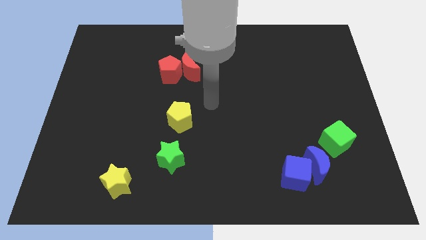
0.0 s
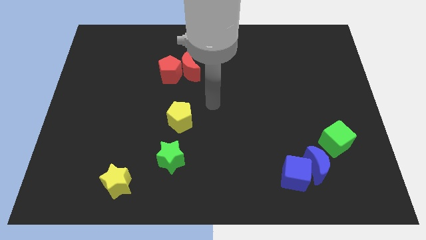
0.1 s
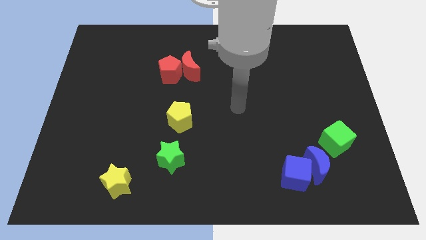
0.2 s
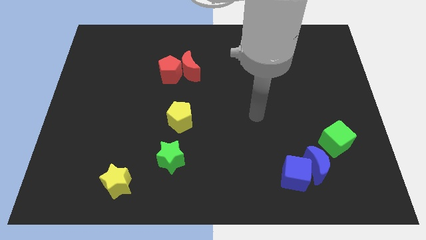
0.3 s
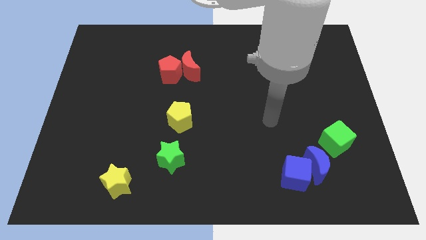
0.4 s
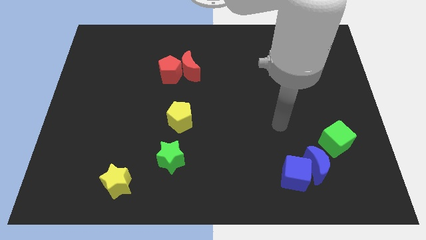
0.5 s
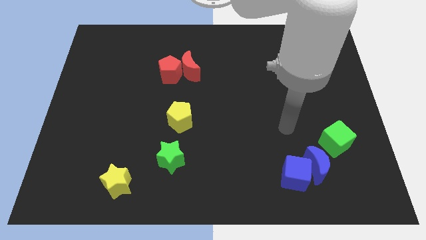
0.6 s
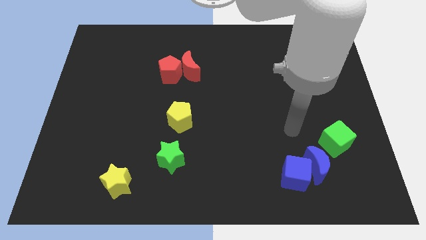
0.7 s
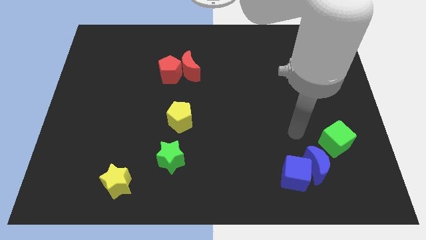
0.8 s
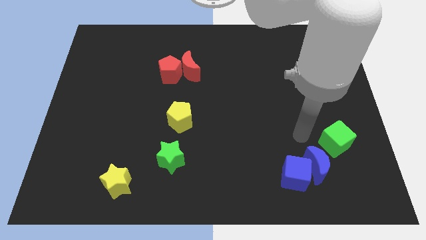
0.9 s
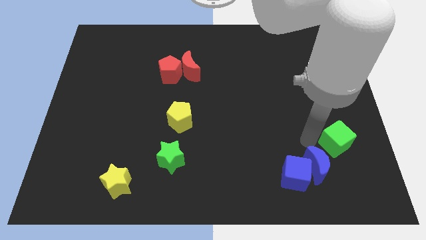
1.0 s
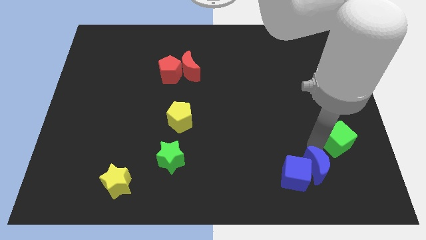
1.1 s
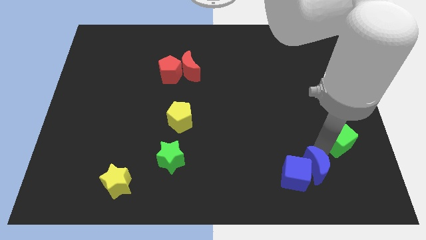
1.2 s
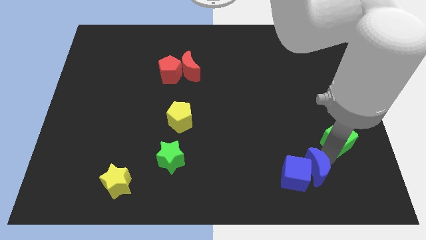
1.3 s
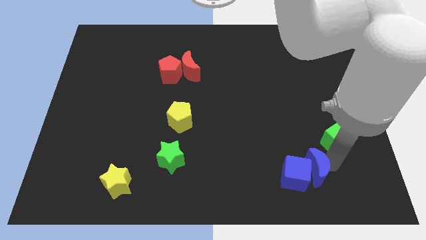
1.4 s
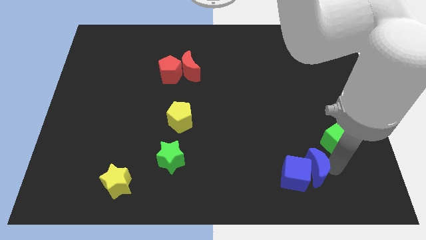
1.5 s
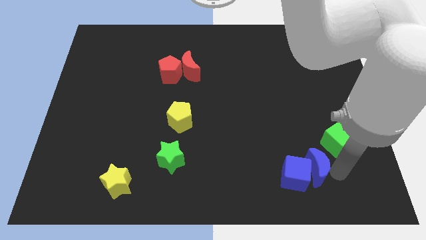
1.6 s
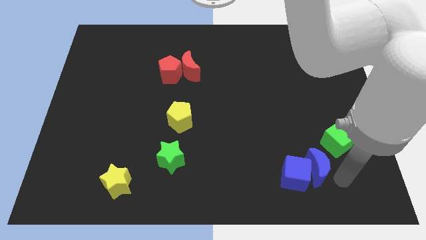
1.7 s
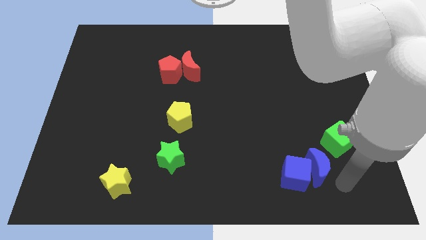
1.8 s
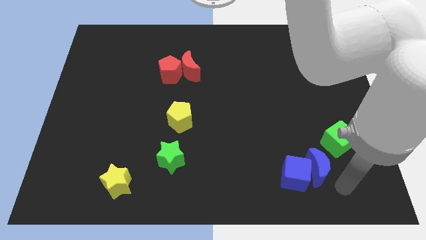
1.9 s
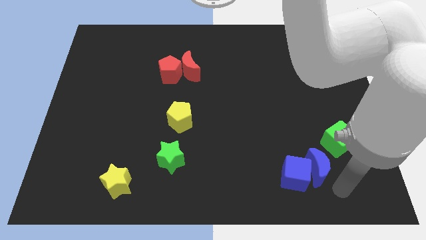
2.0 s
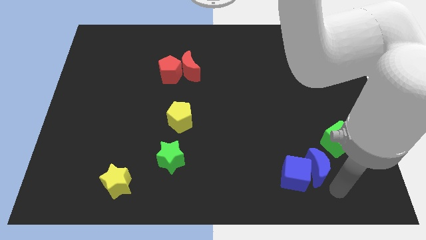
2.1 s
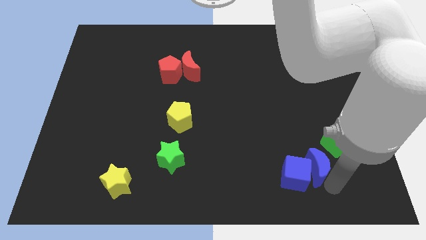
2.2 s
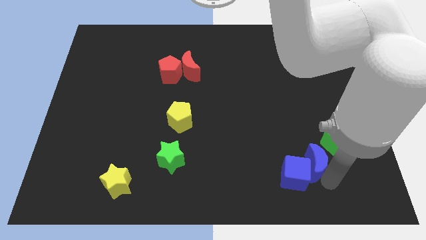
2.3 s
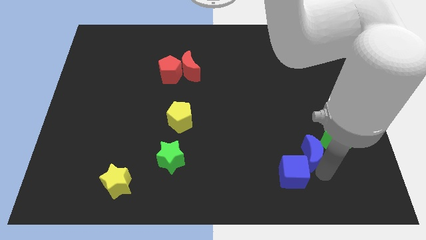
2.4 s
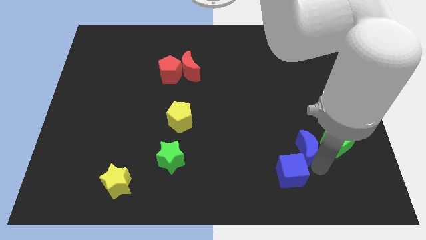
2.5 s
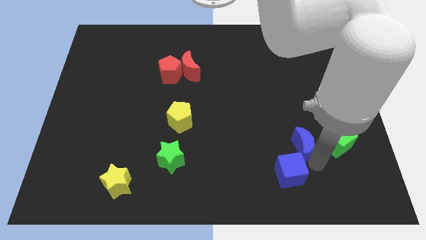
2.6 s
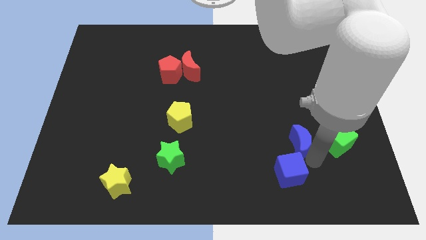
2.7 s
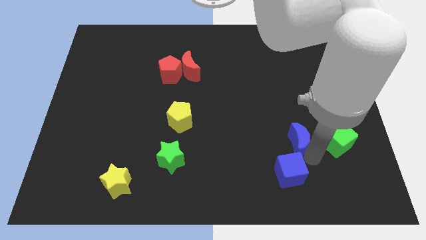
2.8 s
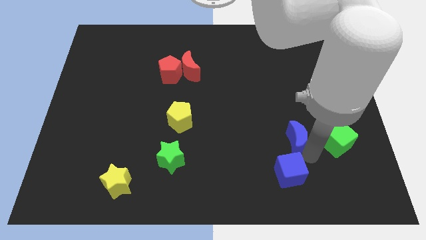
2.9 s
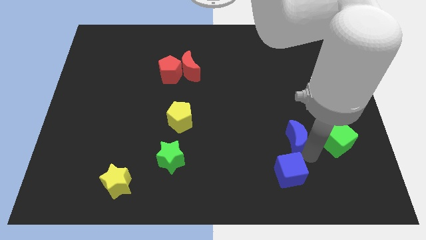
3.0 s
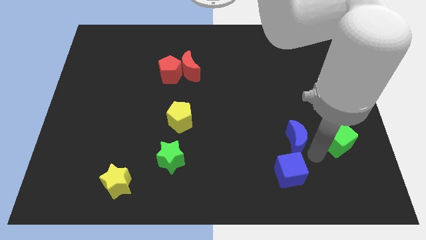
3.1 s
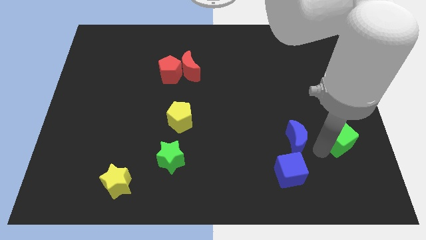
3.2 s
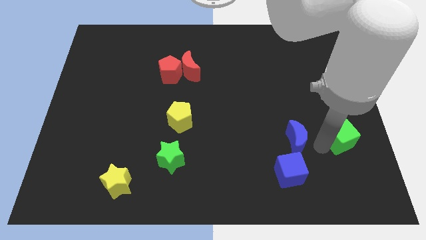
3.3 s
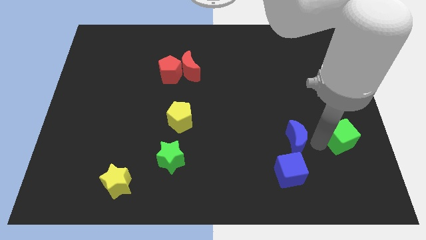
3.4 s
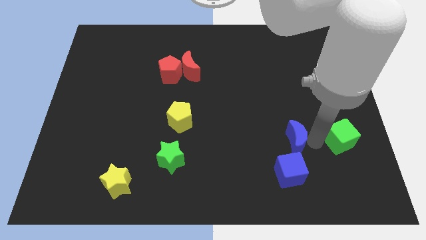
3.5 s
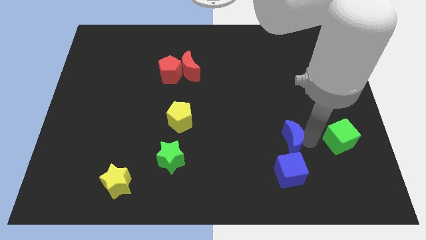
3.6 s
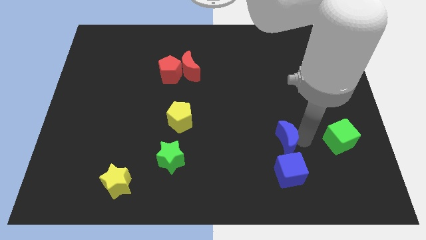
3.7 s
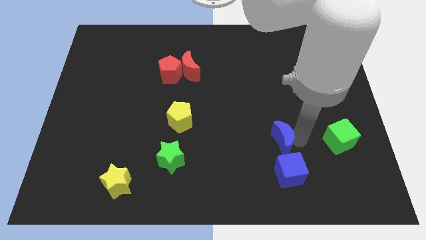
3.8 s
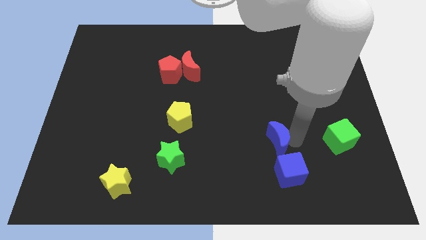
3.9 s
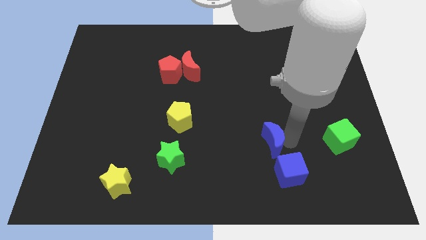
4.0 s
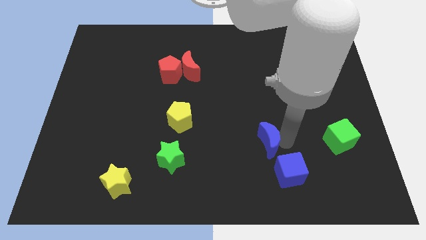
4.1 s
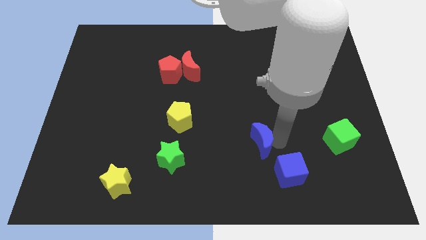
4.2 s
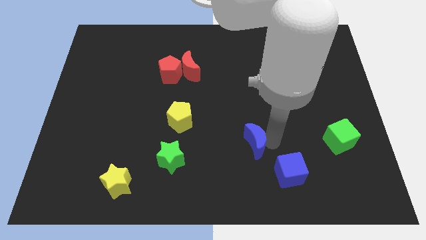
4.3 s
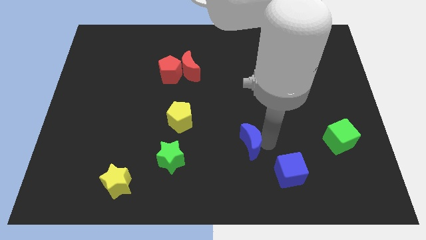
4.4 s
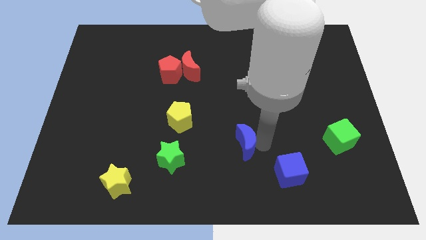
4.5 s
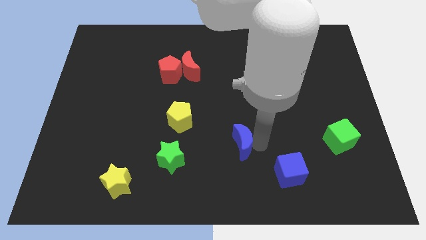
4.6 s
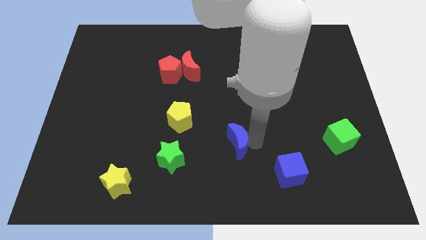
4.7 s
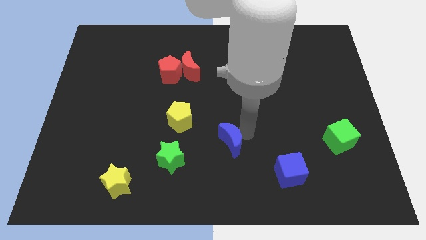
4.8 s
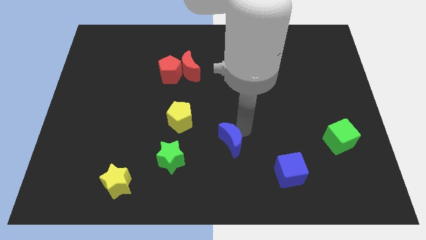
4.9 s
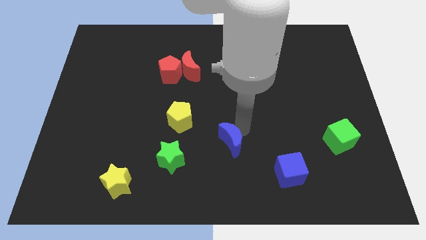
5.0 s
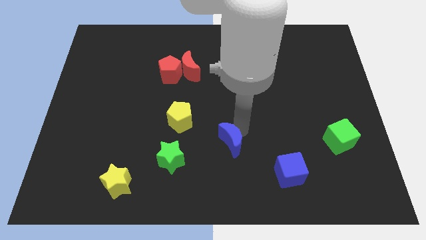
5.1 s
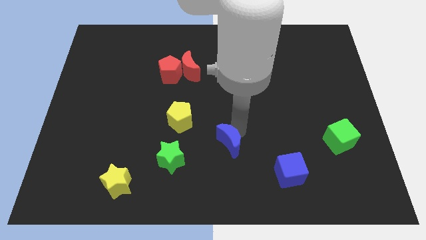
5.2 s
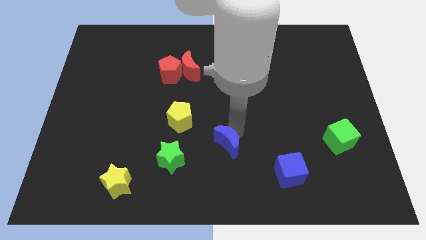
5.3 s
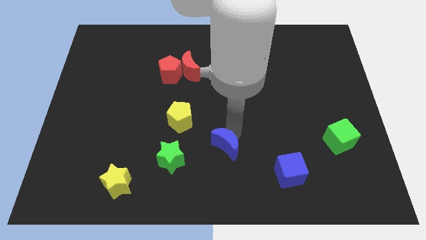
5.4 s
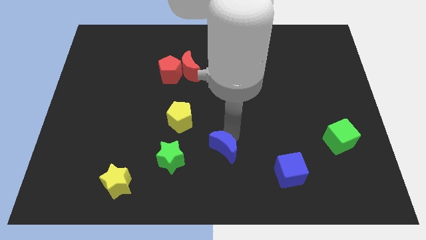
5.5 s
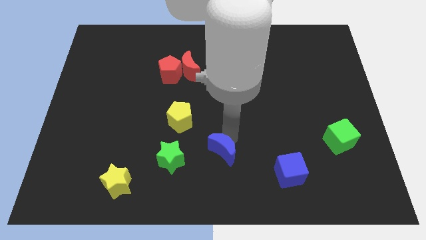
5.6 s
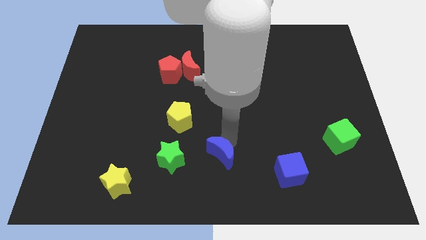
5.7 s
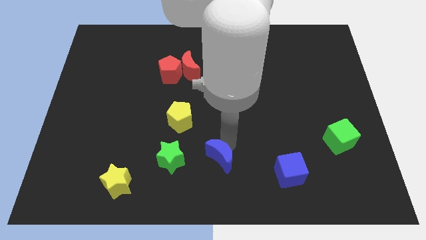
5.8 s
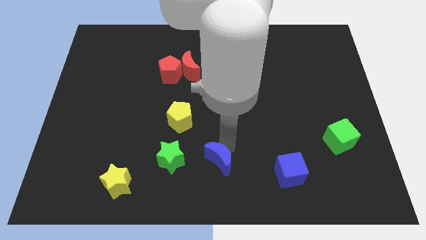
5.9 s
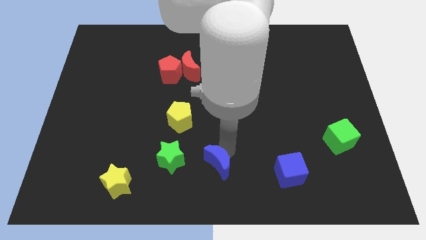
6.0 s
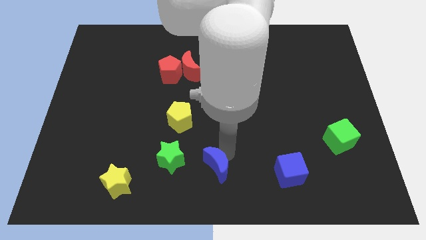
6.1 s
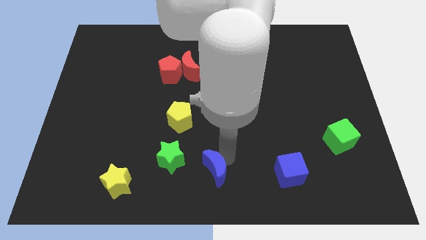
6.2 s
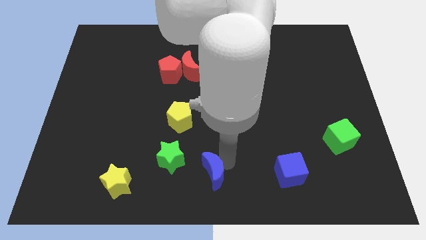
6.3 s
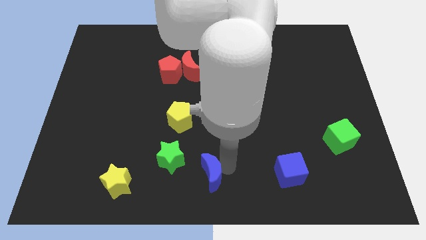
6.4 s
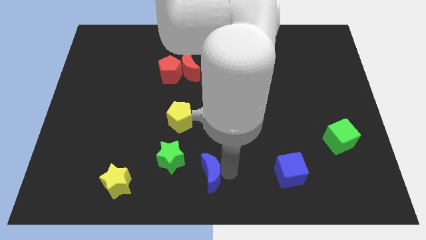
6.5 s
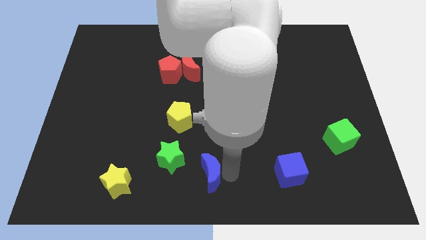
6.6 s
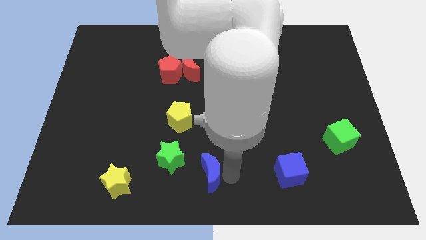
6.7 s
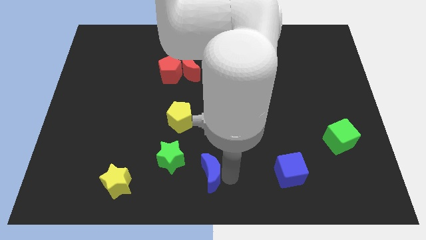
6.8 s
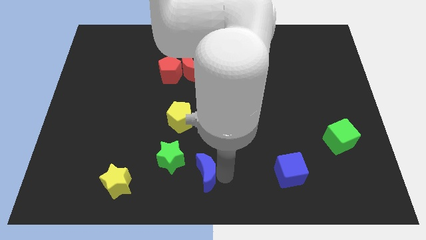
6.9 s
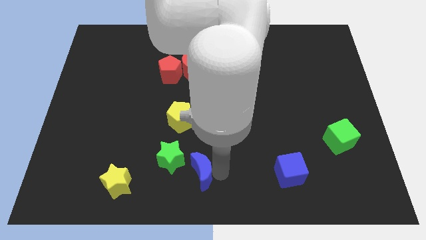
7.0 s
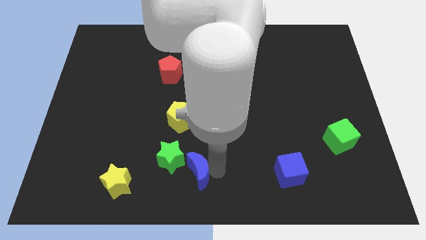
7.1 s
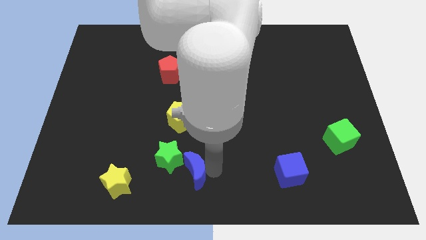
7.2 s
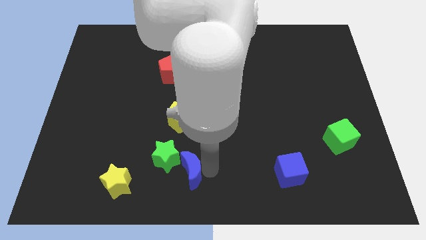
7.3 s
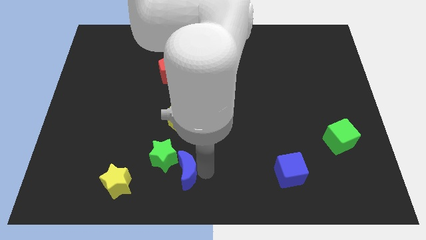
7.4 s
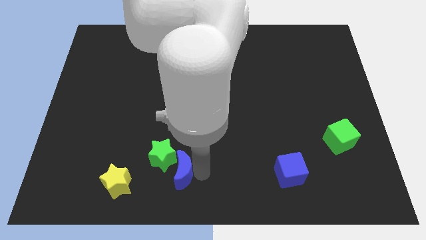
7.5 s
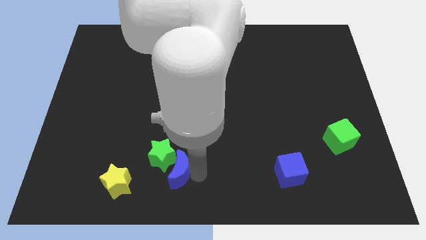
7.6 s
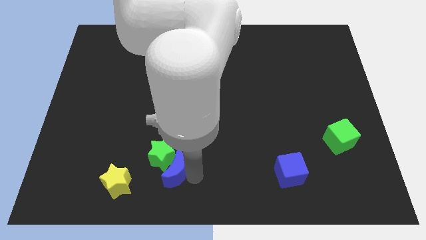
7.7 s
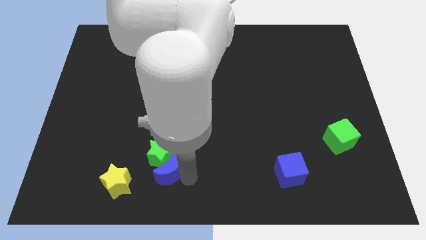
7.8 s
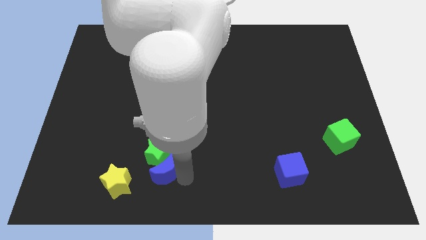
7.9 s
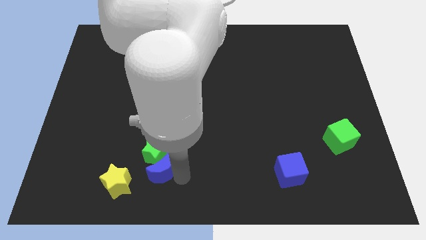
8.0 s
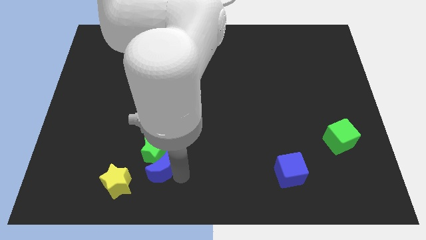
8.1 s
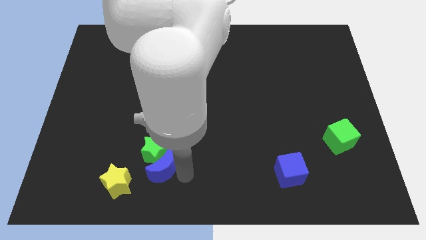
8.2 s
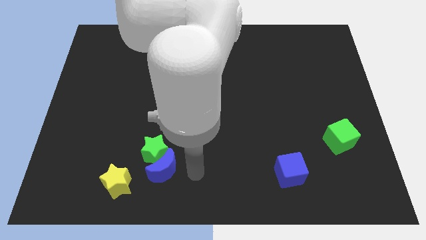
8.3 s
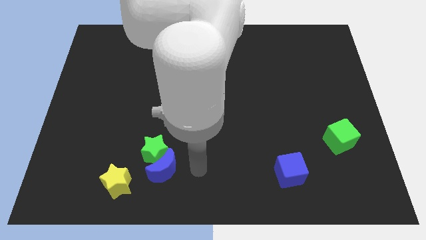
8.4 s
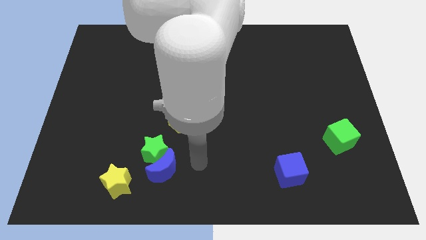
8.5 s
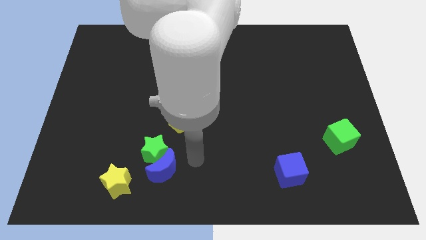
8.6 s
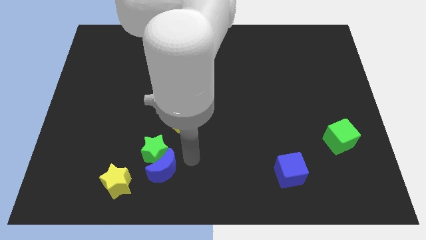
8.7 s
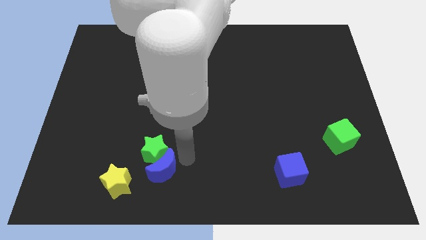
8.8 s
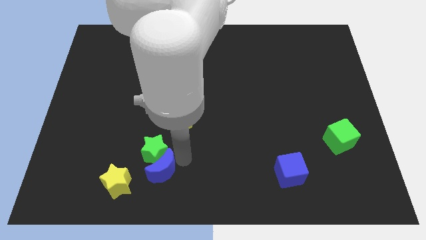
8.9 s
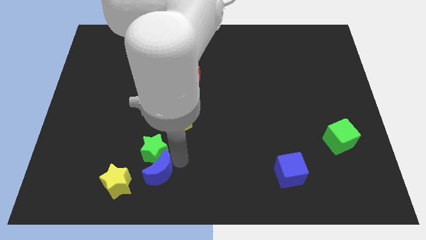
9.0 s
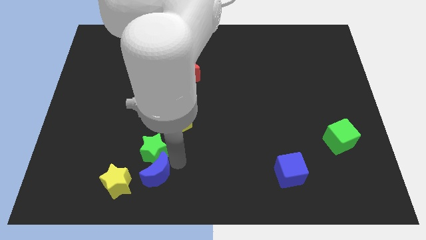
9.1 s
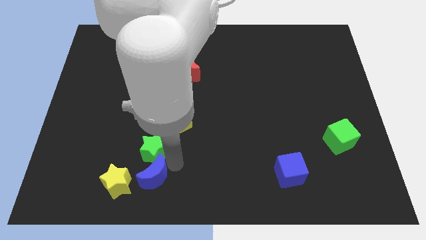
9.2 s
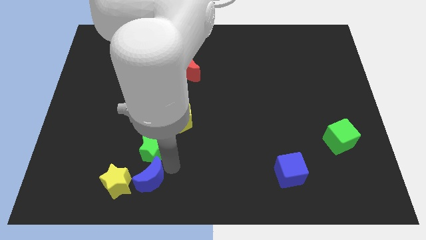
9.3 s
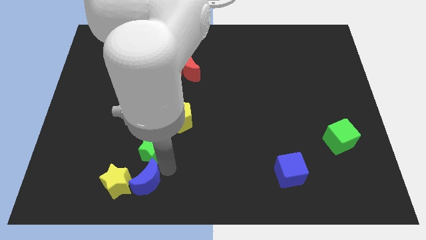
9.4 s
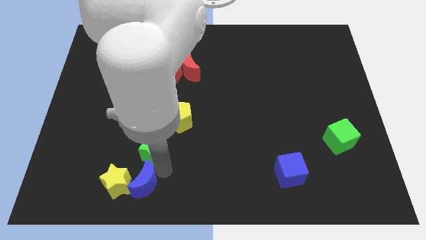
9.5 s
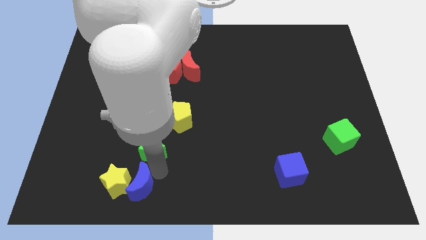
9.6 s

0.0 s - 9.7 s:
push the blue moon towards the yellow star
